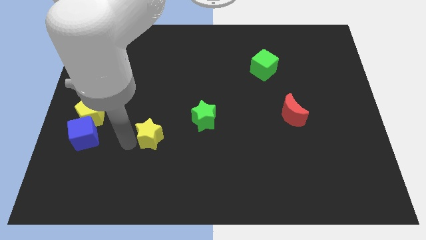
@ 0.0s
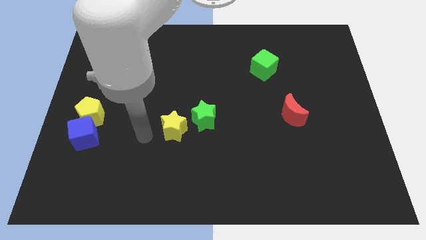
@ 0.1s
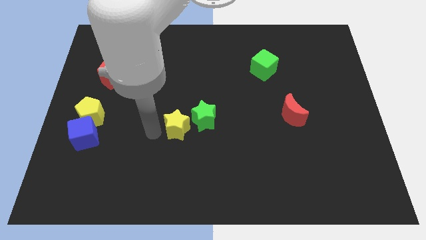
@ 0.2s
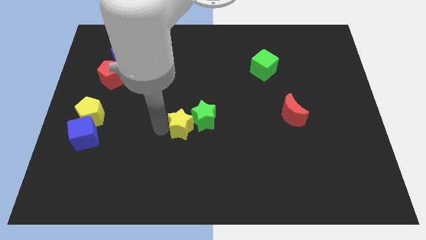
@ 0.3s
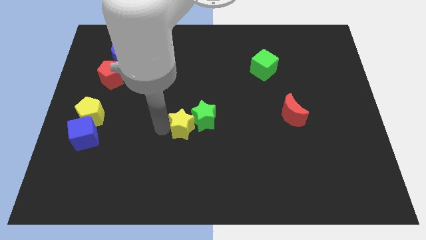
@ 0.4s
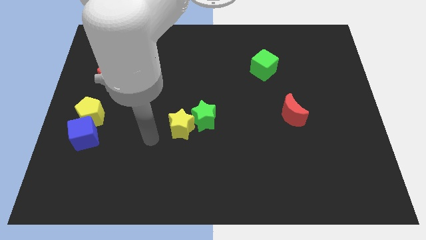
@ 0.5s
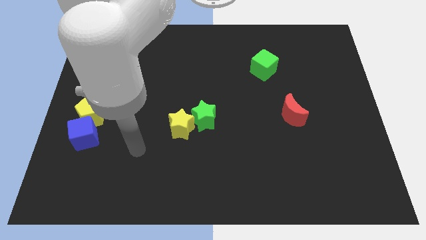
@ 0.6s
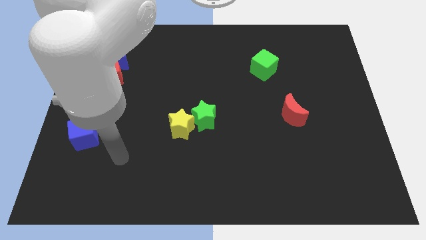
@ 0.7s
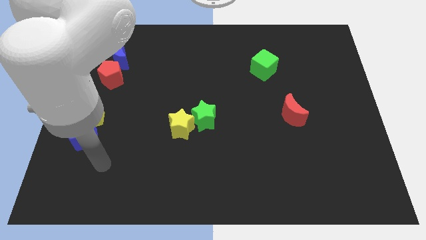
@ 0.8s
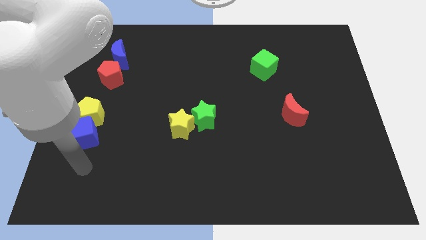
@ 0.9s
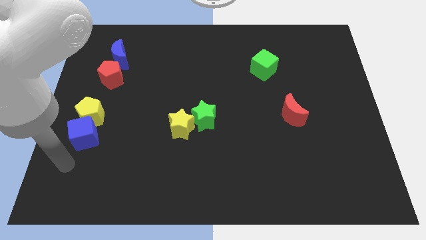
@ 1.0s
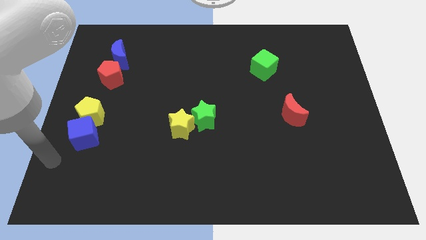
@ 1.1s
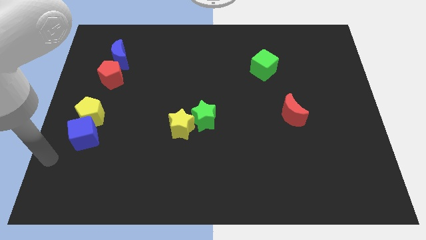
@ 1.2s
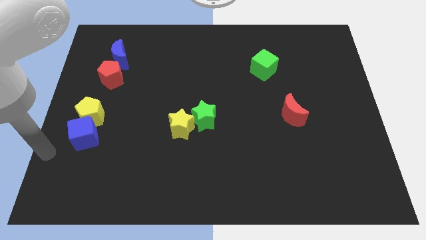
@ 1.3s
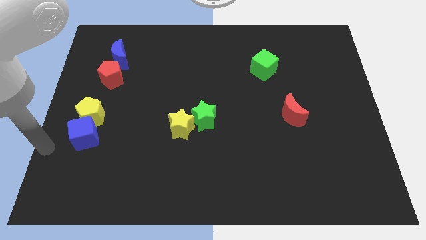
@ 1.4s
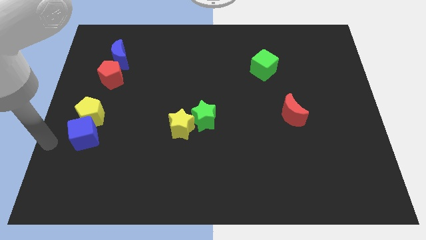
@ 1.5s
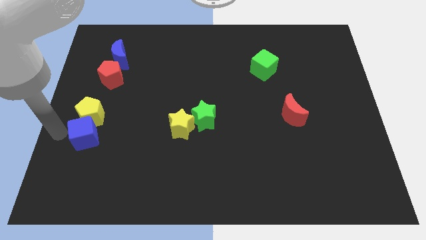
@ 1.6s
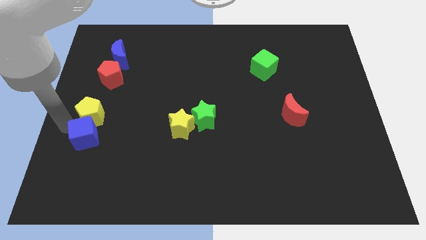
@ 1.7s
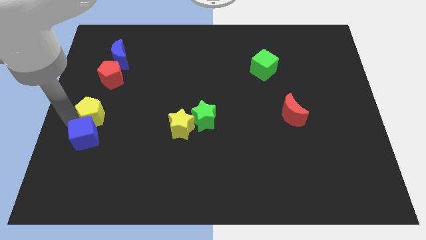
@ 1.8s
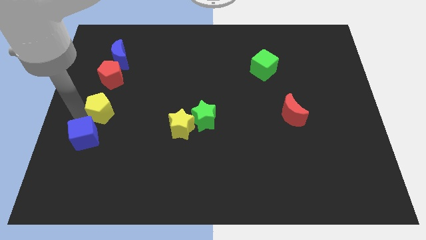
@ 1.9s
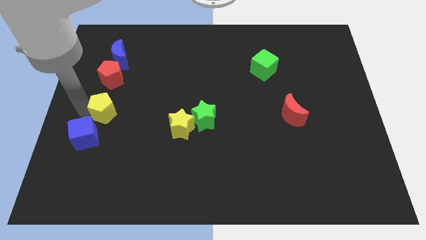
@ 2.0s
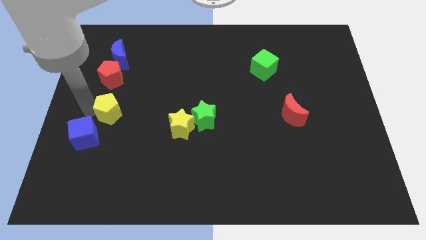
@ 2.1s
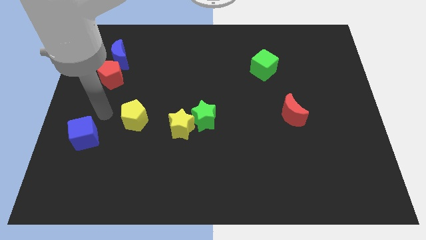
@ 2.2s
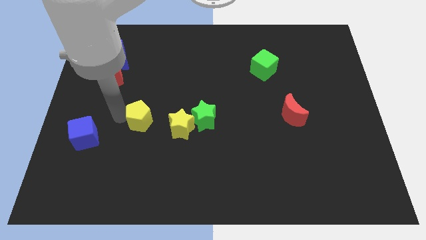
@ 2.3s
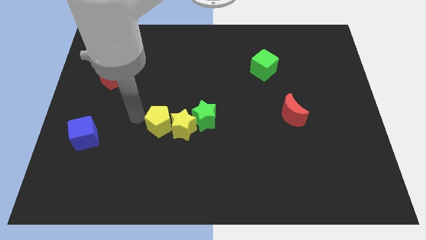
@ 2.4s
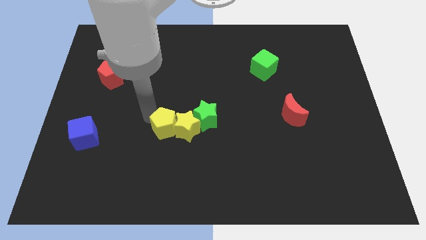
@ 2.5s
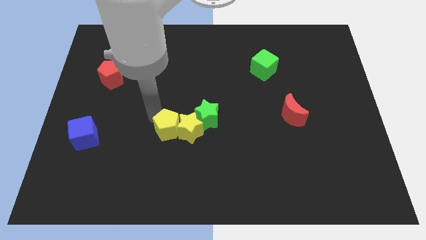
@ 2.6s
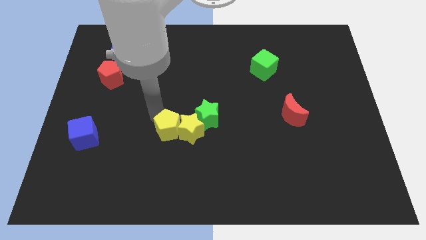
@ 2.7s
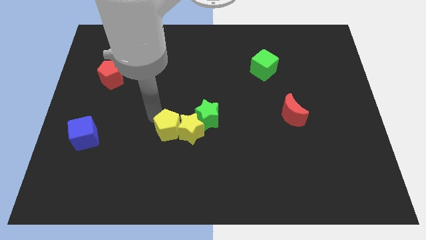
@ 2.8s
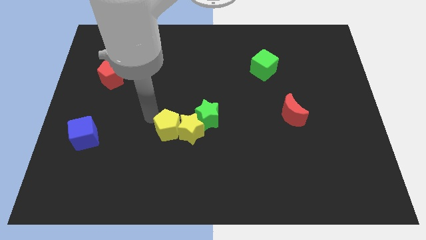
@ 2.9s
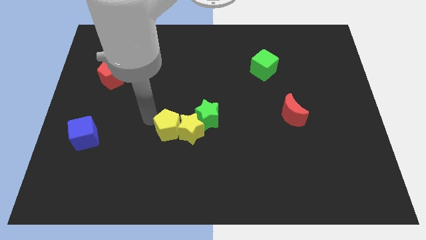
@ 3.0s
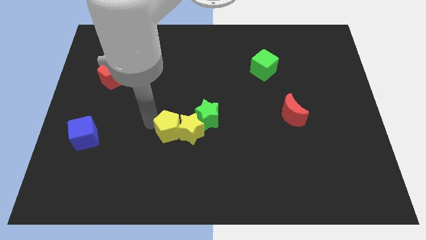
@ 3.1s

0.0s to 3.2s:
place yellow pentagon beside yellow star

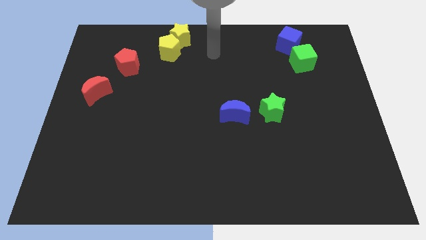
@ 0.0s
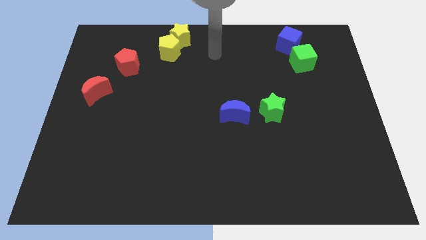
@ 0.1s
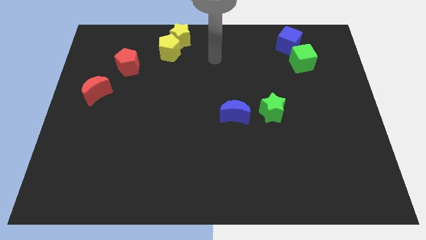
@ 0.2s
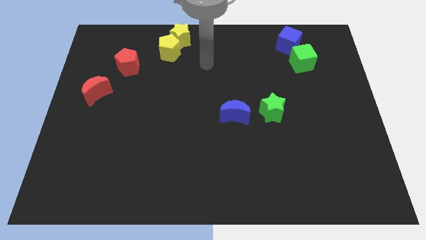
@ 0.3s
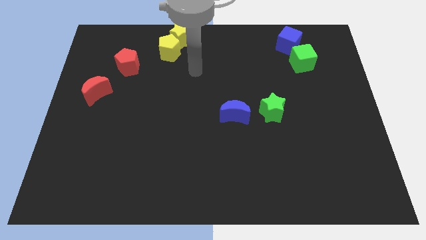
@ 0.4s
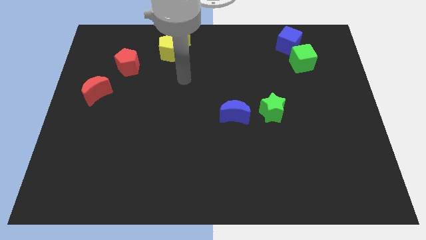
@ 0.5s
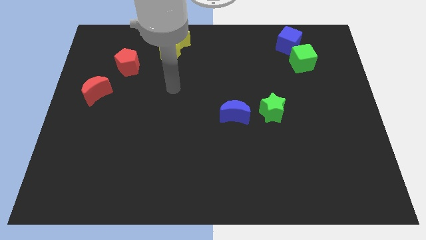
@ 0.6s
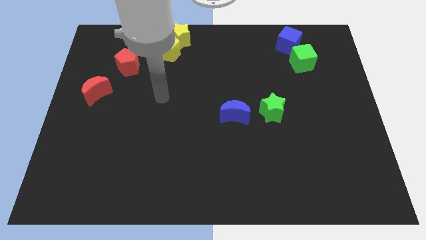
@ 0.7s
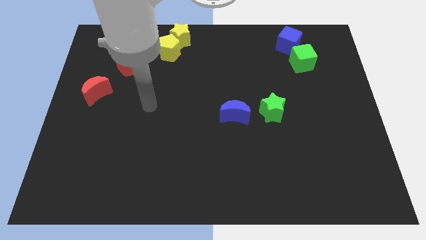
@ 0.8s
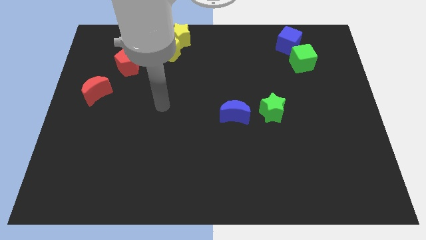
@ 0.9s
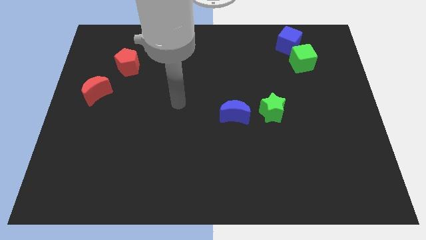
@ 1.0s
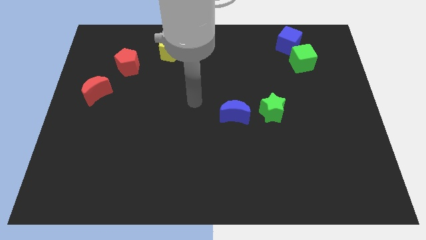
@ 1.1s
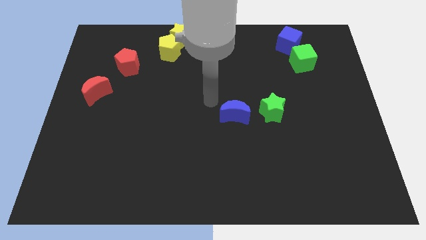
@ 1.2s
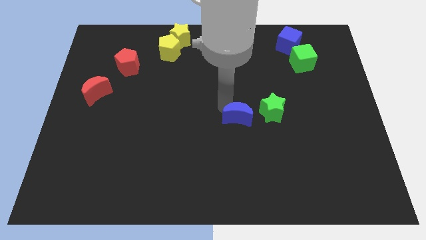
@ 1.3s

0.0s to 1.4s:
move your arm towards the blue crescent

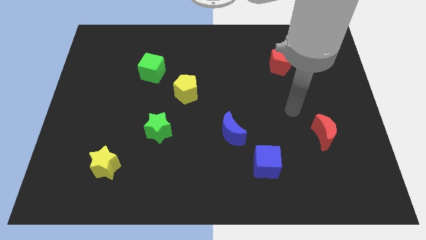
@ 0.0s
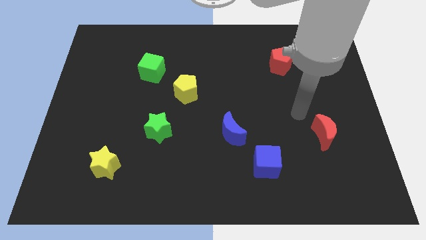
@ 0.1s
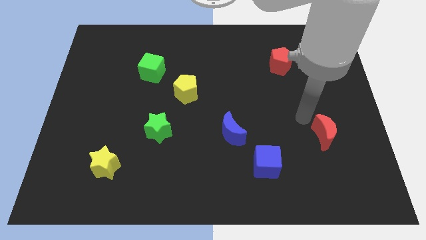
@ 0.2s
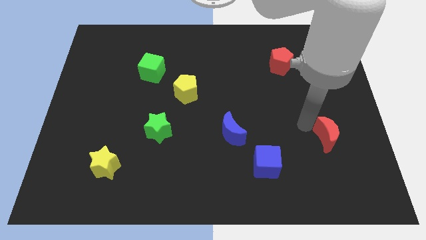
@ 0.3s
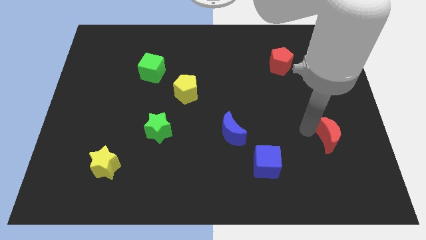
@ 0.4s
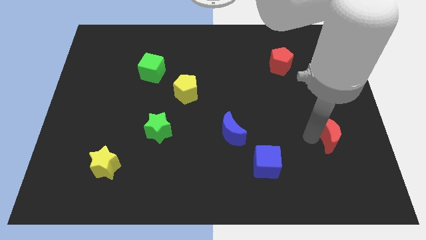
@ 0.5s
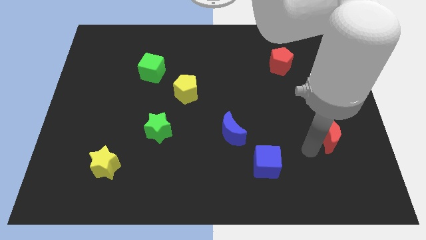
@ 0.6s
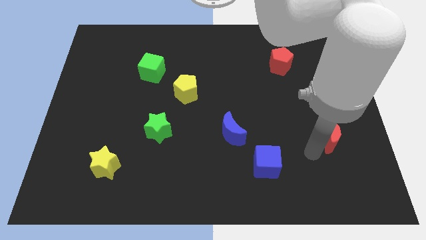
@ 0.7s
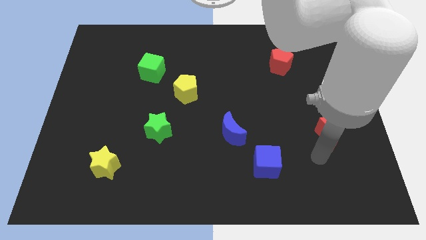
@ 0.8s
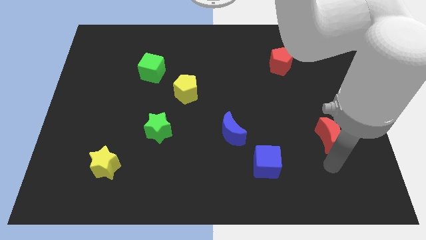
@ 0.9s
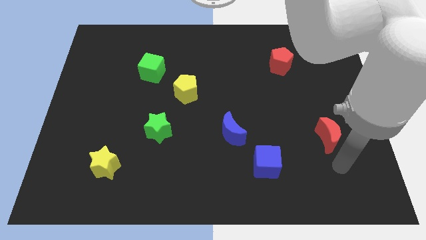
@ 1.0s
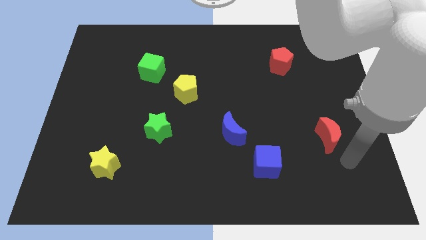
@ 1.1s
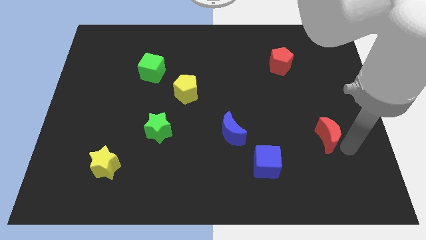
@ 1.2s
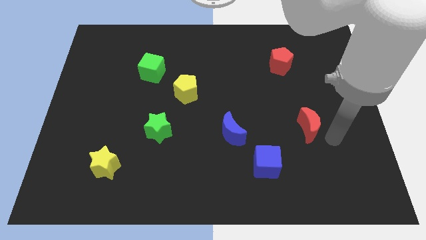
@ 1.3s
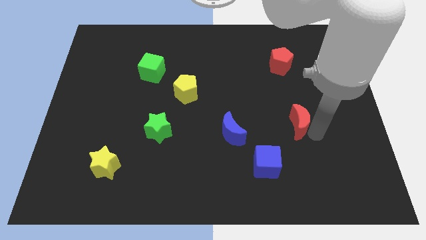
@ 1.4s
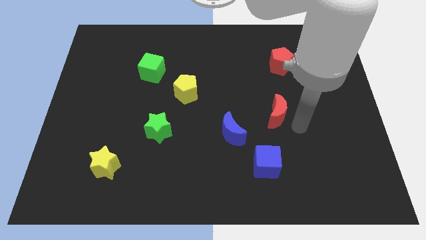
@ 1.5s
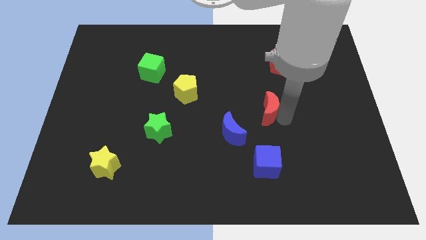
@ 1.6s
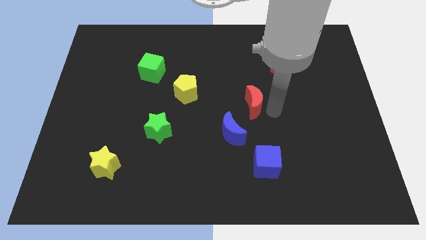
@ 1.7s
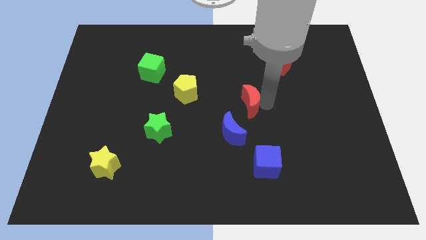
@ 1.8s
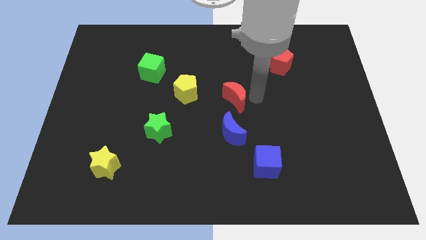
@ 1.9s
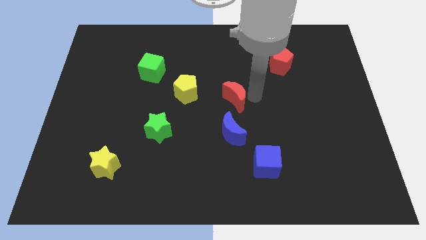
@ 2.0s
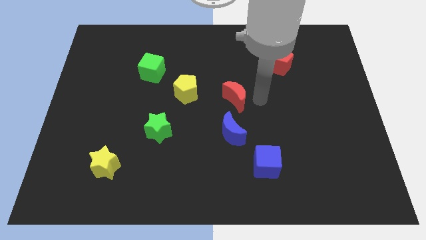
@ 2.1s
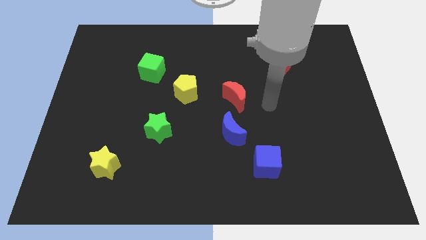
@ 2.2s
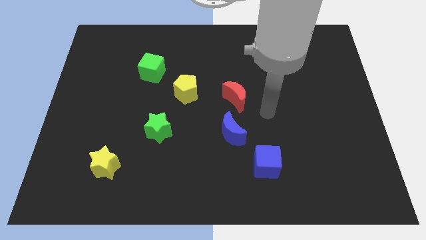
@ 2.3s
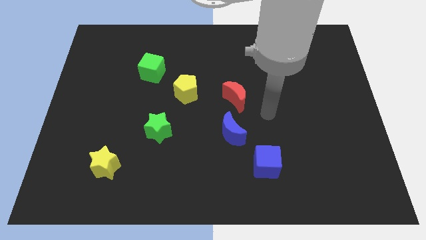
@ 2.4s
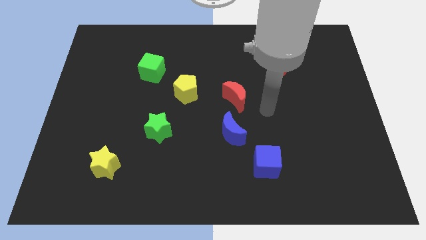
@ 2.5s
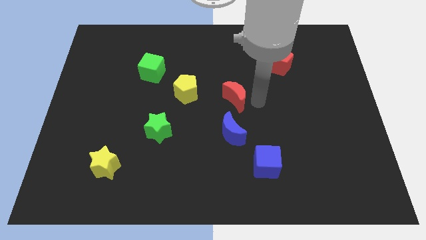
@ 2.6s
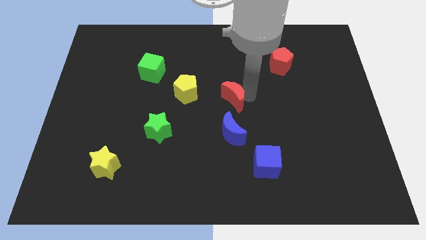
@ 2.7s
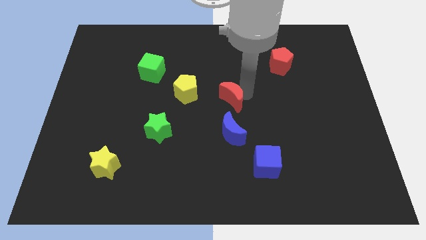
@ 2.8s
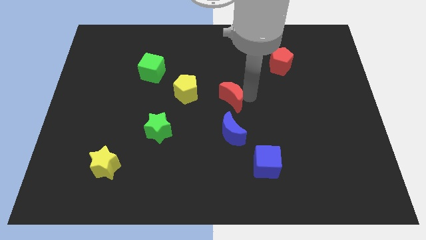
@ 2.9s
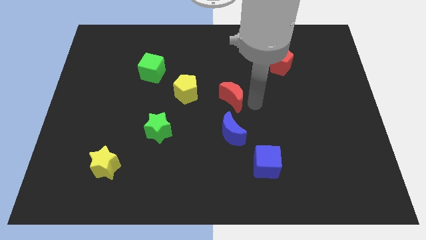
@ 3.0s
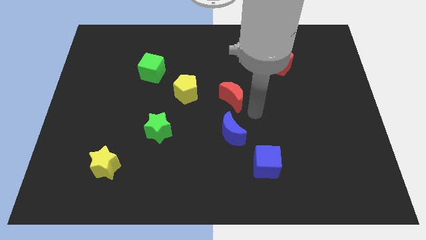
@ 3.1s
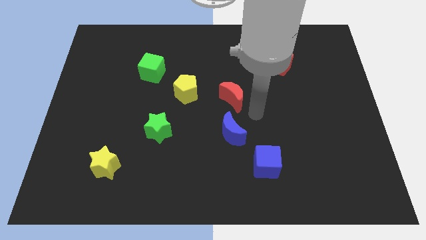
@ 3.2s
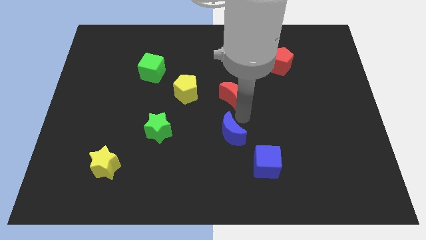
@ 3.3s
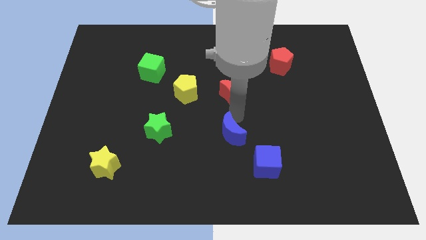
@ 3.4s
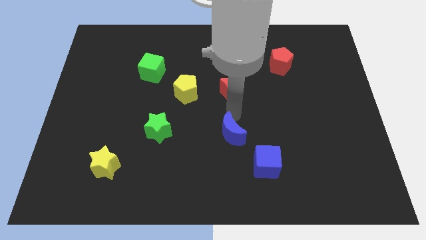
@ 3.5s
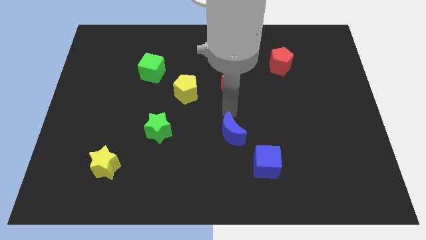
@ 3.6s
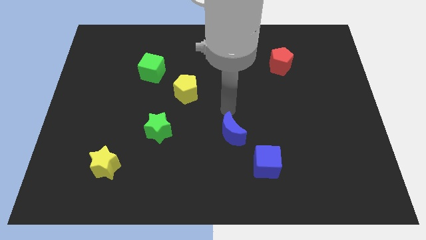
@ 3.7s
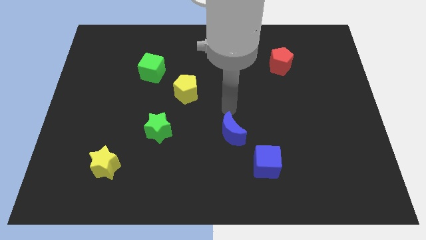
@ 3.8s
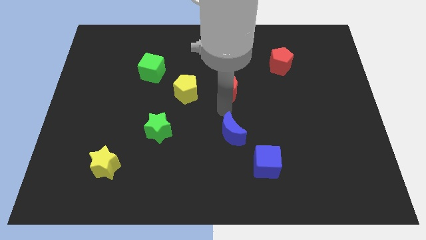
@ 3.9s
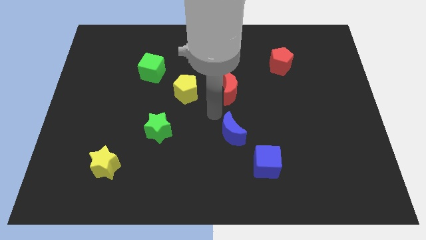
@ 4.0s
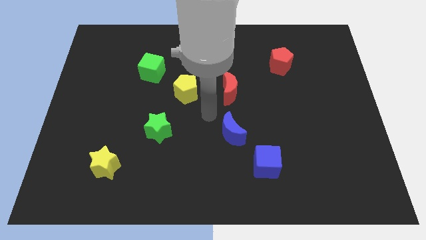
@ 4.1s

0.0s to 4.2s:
place the red crescent to the right of the yellow pentagon

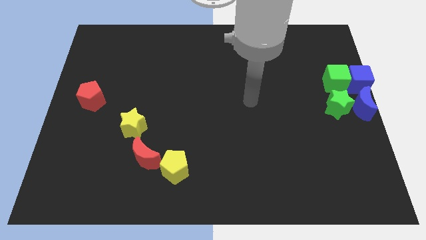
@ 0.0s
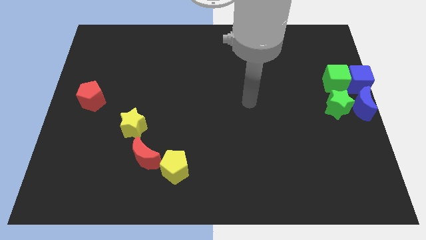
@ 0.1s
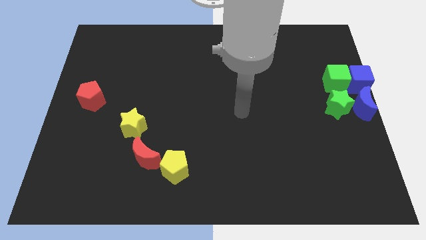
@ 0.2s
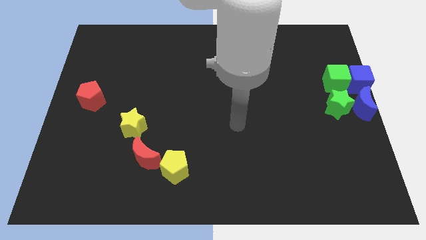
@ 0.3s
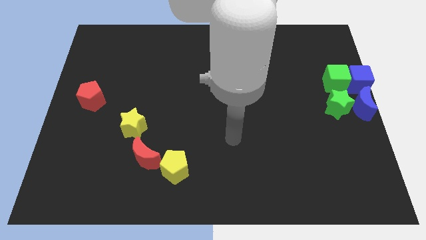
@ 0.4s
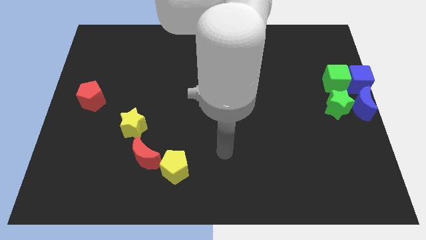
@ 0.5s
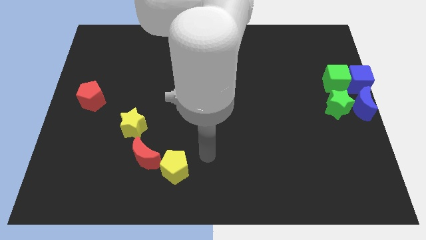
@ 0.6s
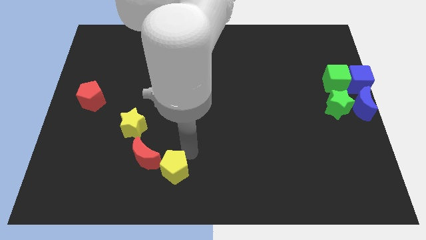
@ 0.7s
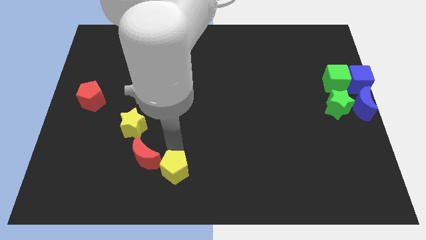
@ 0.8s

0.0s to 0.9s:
point your arm at the top of the yellow pentagon
